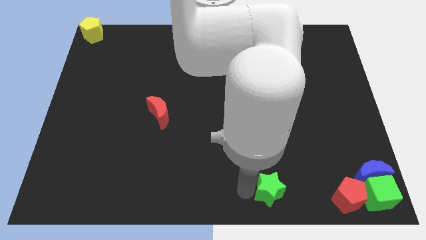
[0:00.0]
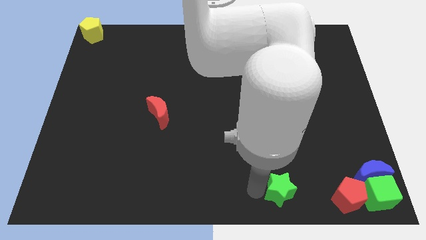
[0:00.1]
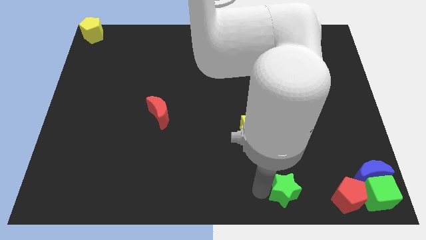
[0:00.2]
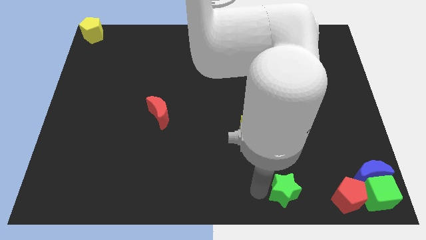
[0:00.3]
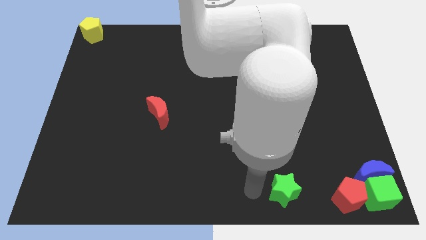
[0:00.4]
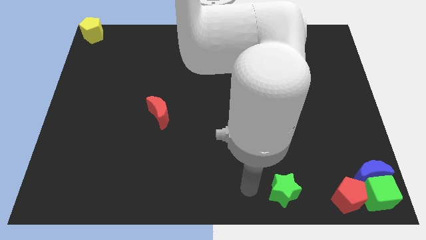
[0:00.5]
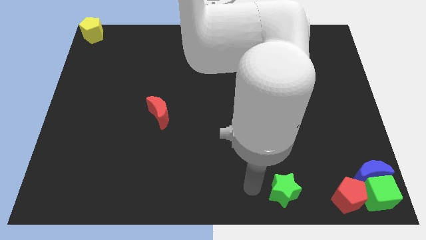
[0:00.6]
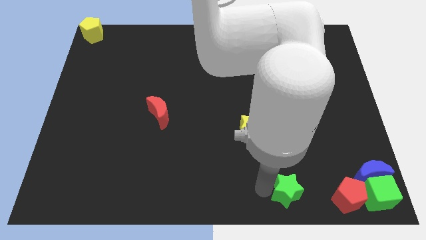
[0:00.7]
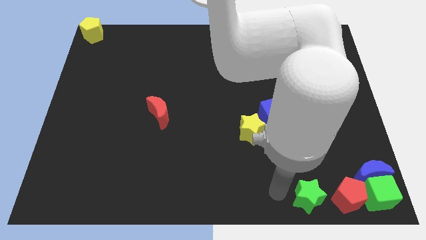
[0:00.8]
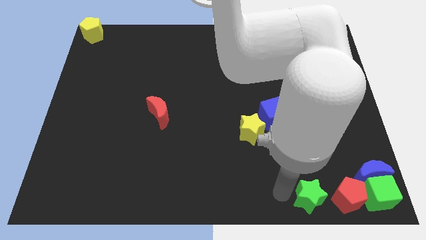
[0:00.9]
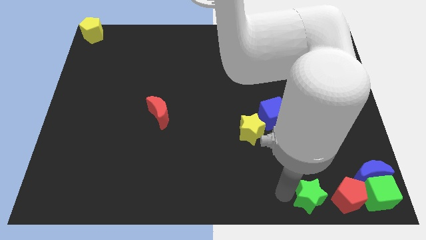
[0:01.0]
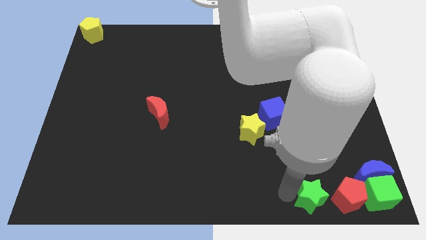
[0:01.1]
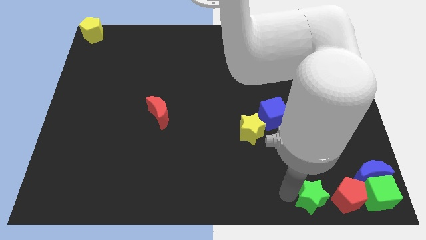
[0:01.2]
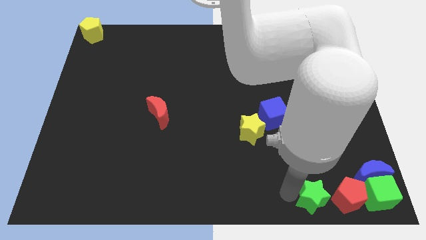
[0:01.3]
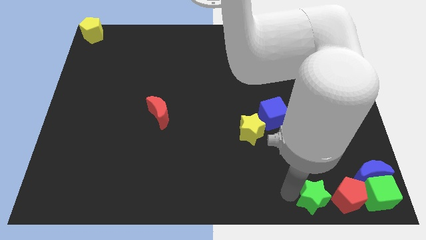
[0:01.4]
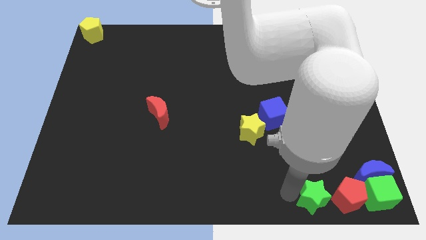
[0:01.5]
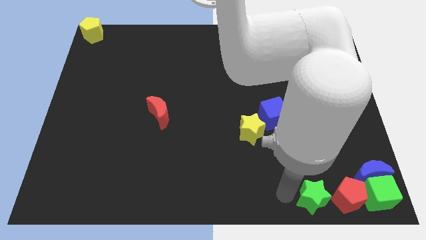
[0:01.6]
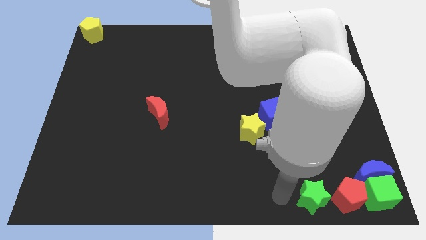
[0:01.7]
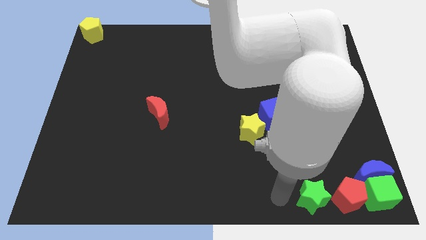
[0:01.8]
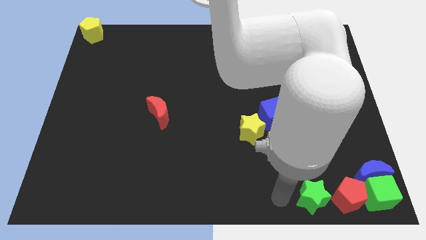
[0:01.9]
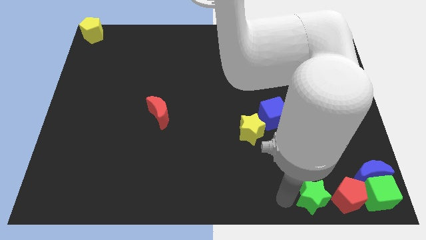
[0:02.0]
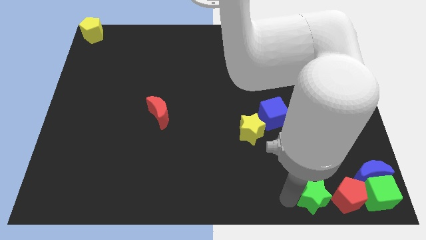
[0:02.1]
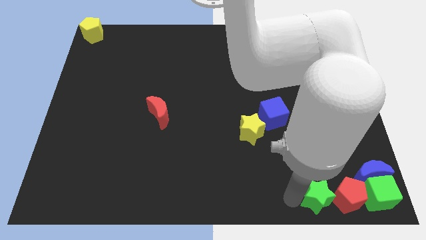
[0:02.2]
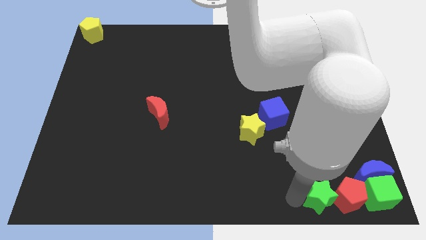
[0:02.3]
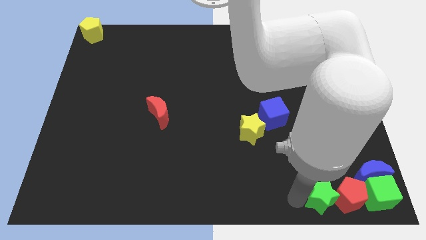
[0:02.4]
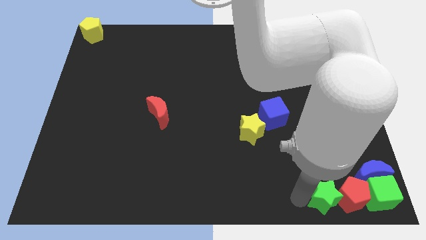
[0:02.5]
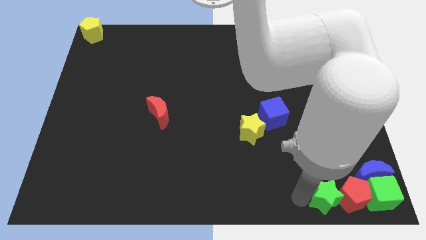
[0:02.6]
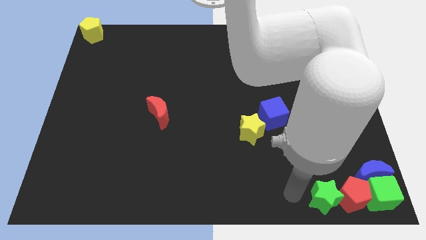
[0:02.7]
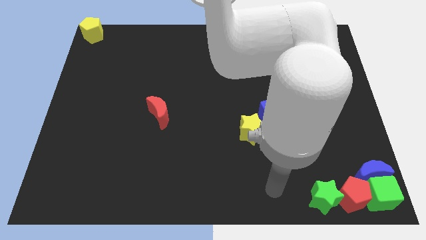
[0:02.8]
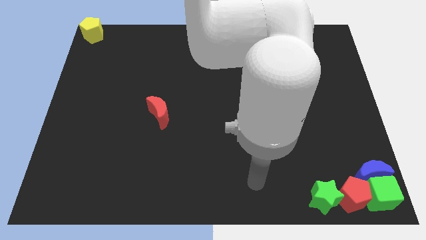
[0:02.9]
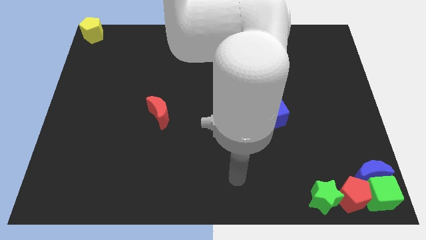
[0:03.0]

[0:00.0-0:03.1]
push green star in to red pentagon

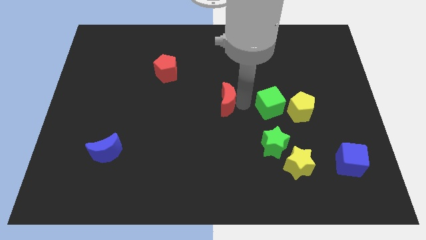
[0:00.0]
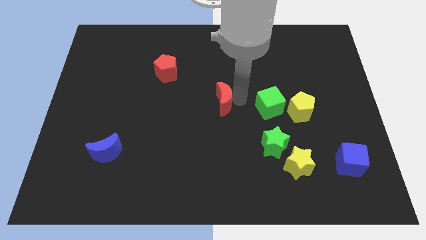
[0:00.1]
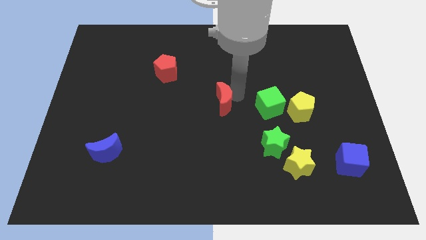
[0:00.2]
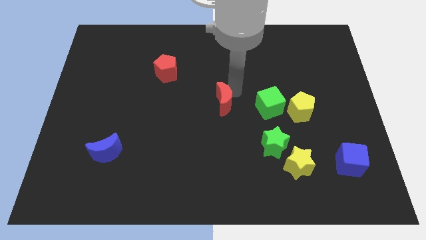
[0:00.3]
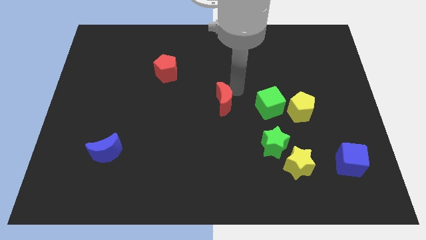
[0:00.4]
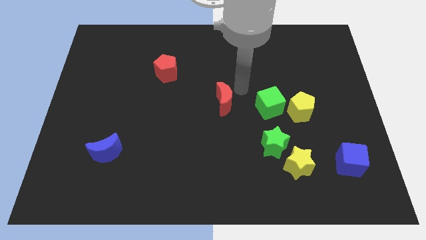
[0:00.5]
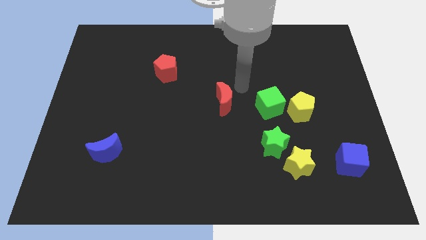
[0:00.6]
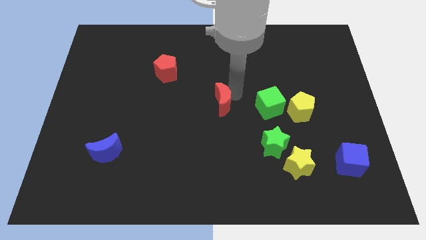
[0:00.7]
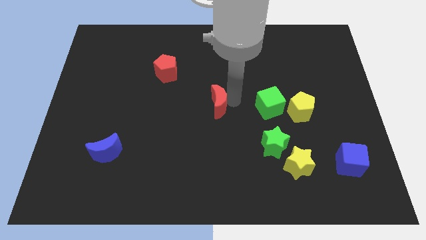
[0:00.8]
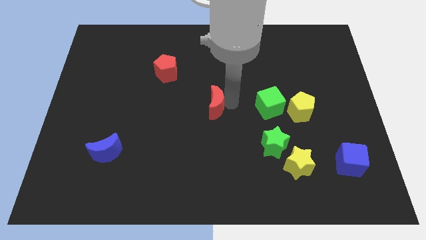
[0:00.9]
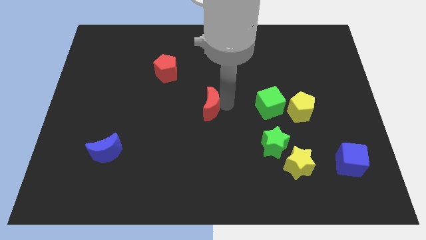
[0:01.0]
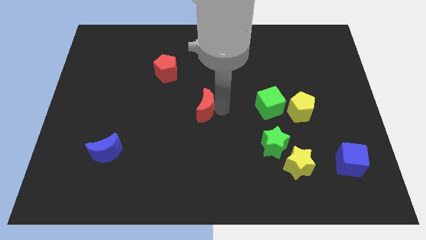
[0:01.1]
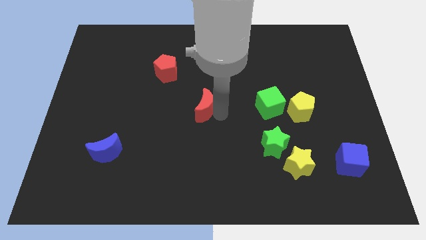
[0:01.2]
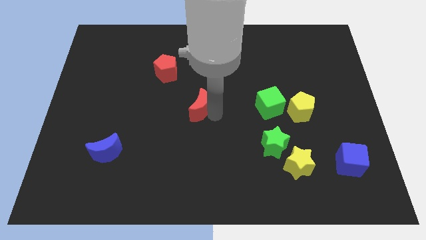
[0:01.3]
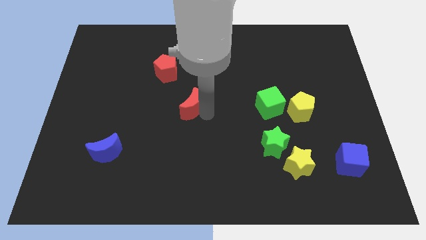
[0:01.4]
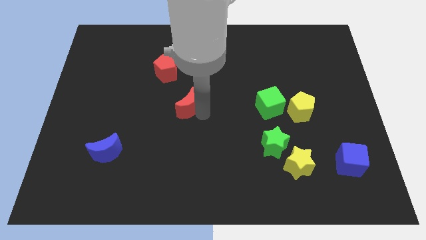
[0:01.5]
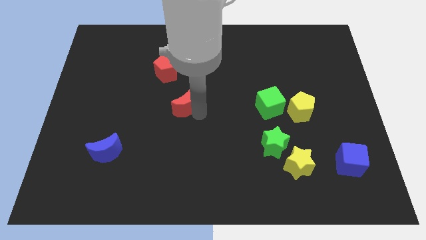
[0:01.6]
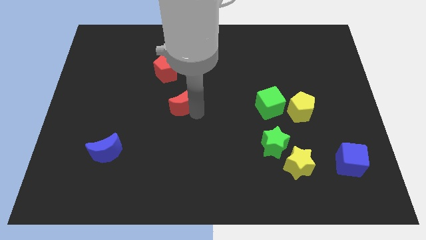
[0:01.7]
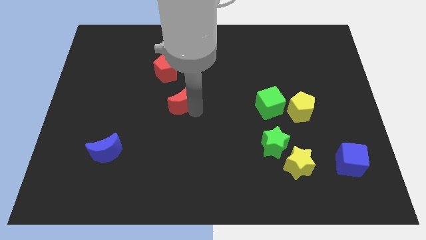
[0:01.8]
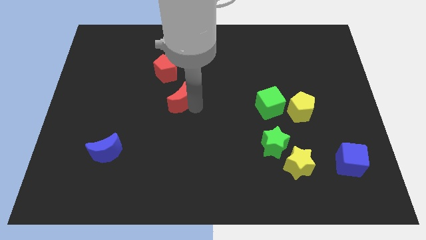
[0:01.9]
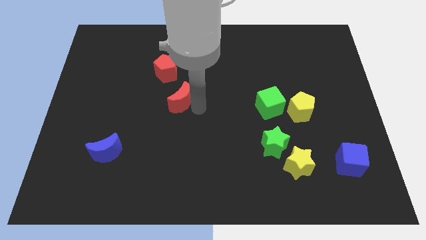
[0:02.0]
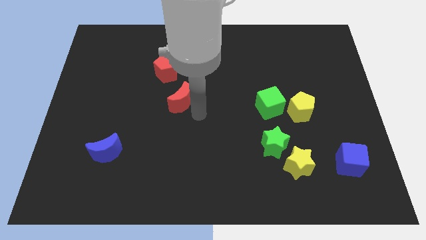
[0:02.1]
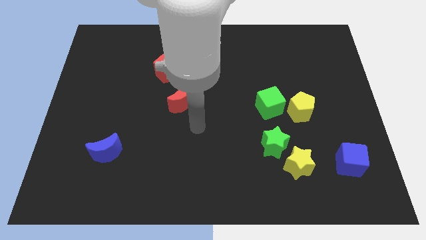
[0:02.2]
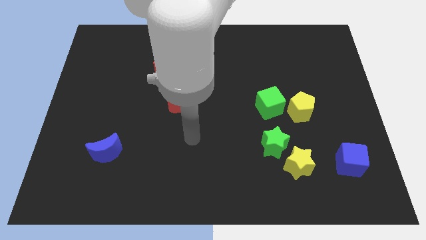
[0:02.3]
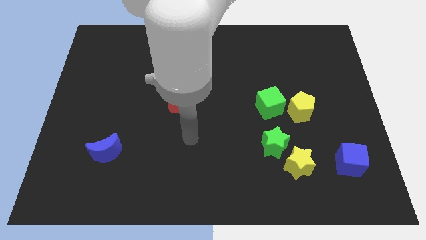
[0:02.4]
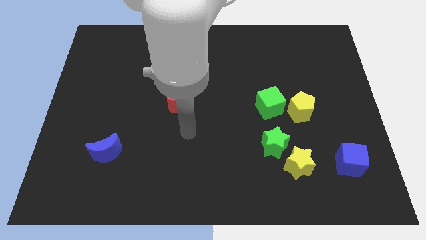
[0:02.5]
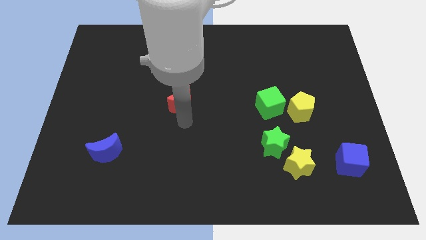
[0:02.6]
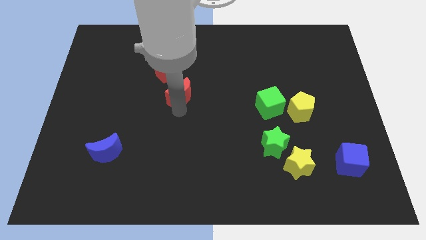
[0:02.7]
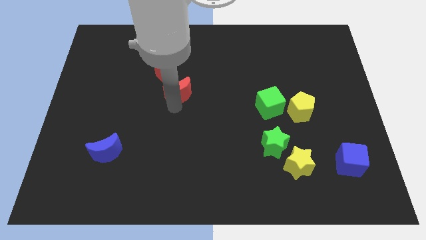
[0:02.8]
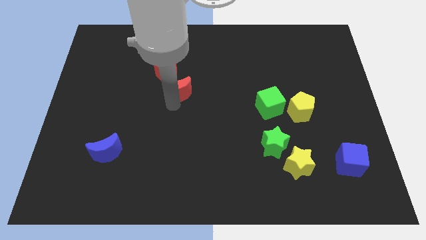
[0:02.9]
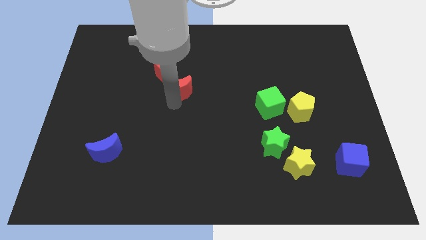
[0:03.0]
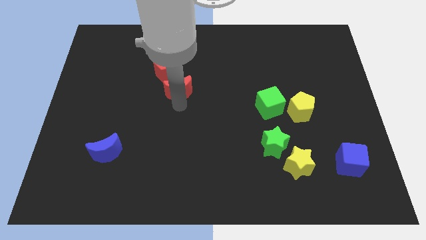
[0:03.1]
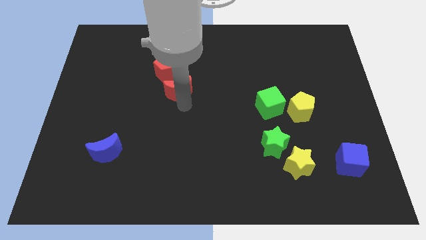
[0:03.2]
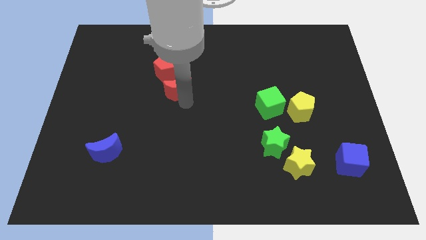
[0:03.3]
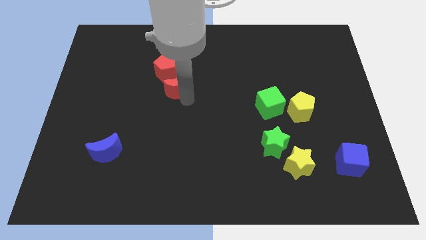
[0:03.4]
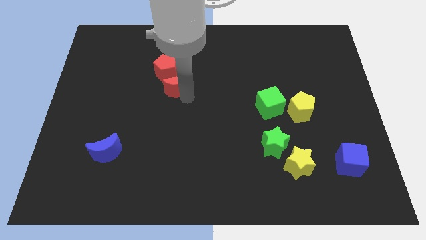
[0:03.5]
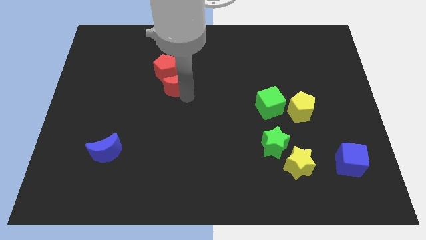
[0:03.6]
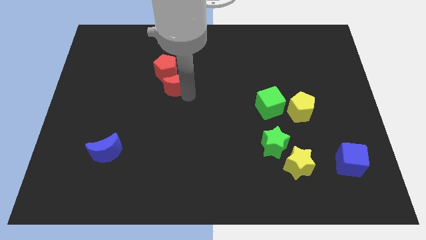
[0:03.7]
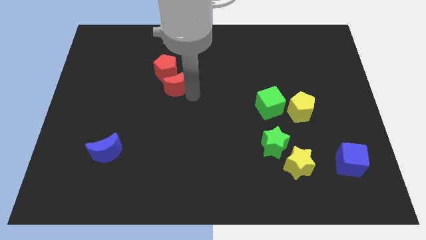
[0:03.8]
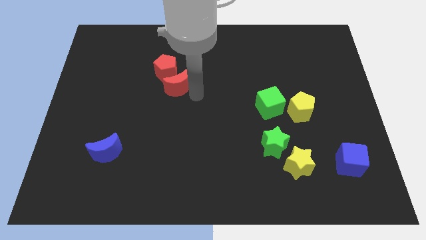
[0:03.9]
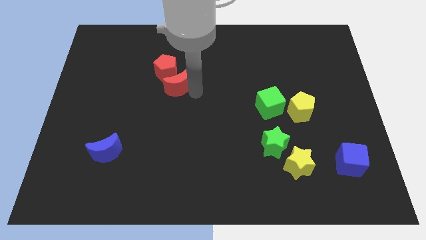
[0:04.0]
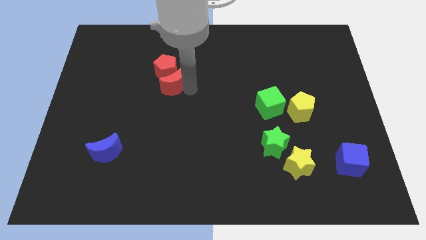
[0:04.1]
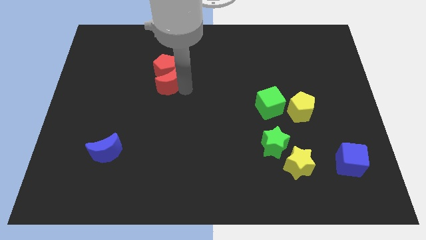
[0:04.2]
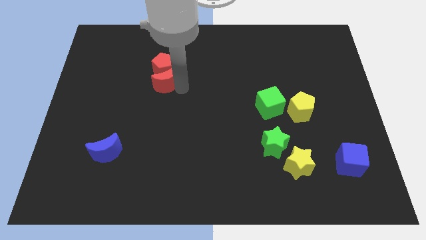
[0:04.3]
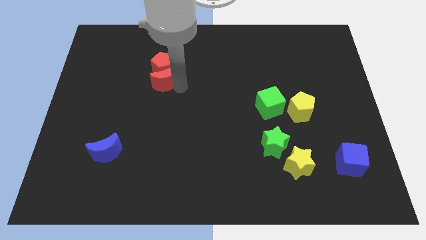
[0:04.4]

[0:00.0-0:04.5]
move the red crescent into red pentagon

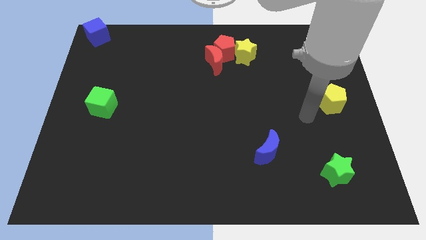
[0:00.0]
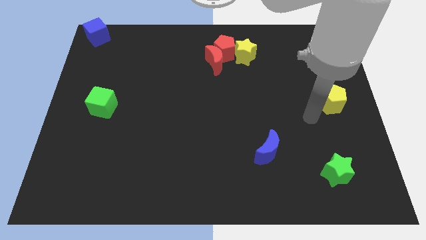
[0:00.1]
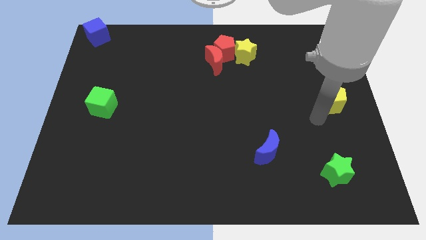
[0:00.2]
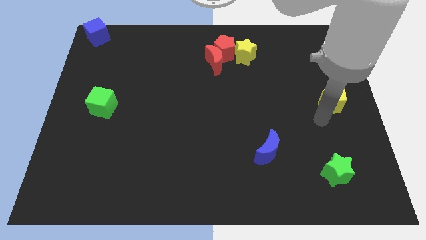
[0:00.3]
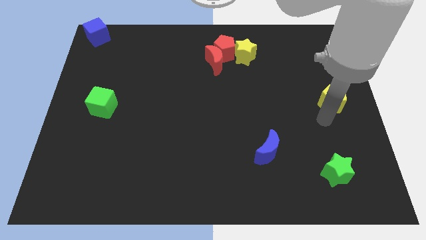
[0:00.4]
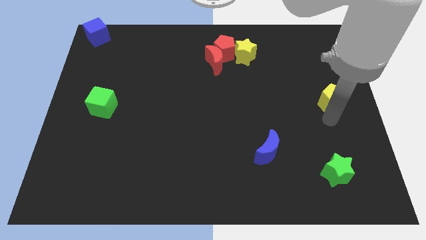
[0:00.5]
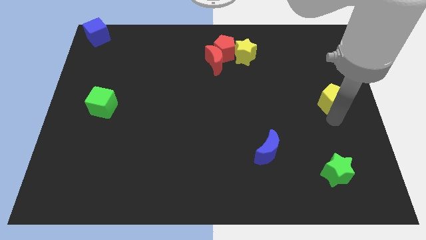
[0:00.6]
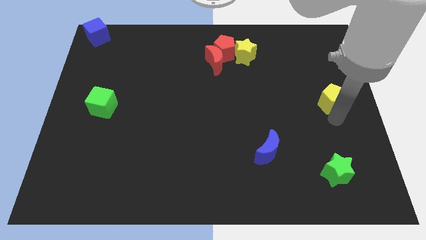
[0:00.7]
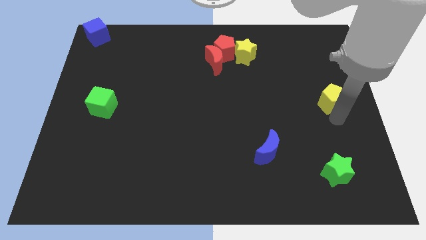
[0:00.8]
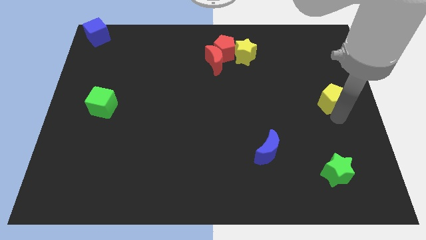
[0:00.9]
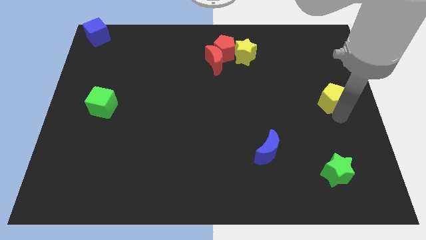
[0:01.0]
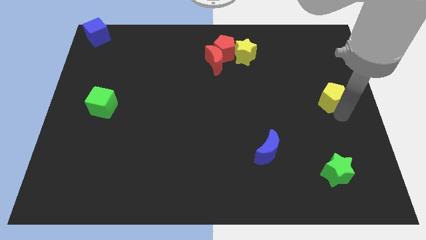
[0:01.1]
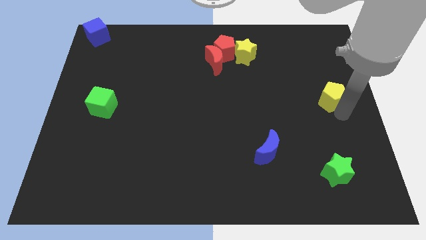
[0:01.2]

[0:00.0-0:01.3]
touch the bottom of the yellow pentagon
